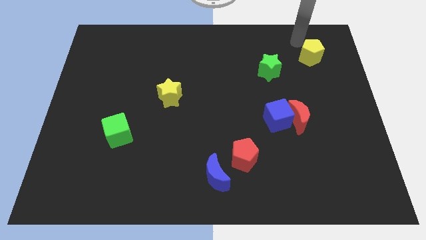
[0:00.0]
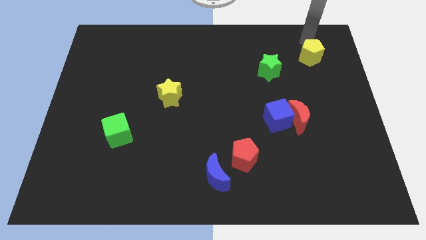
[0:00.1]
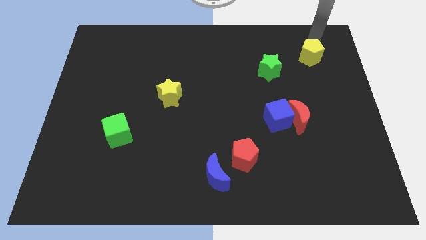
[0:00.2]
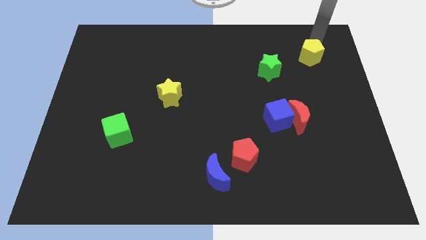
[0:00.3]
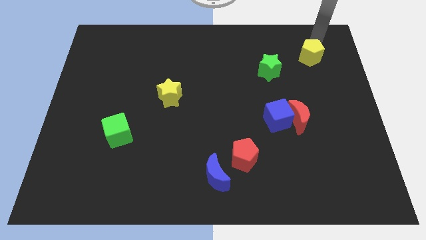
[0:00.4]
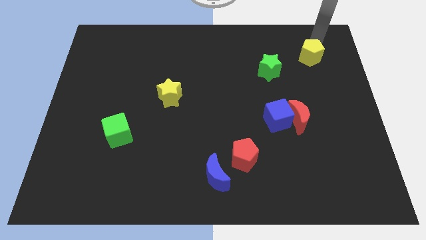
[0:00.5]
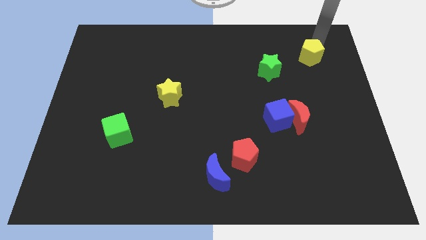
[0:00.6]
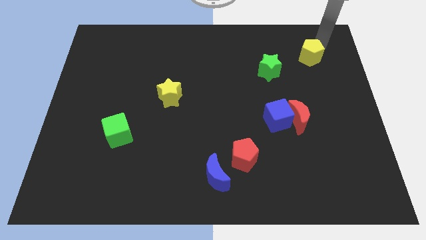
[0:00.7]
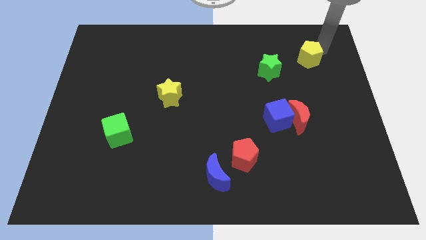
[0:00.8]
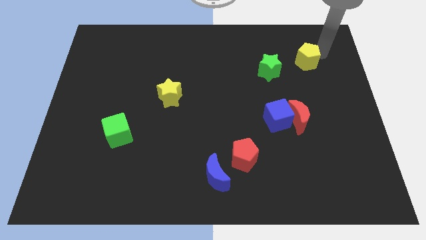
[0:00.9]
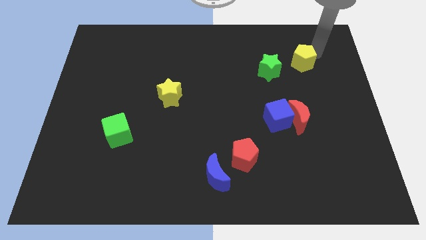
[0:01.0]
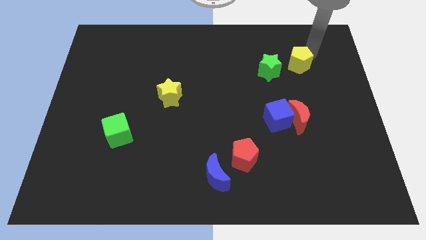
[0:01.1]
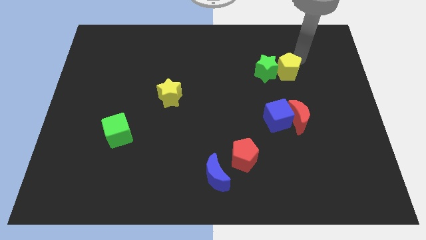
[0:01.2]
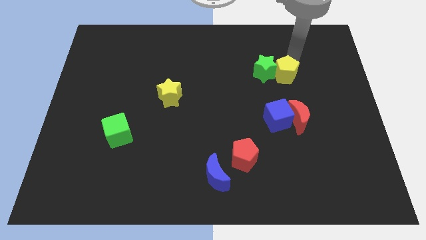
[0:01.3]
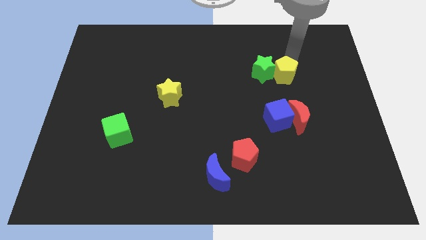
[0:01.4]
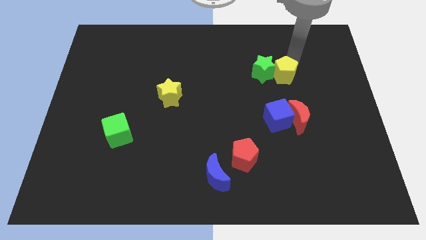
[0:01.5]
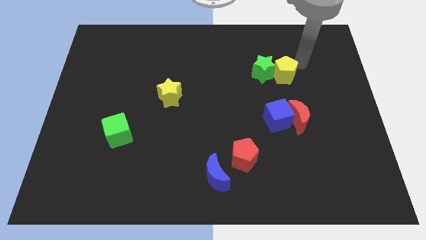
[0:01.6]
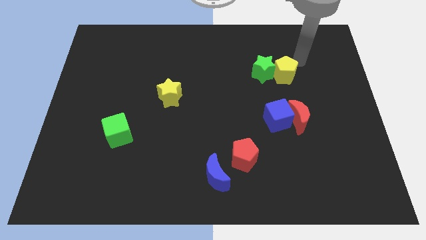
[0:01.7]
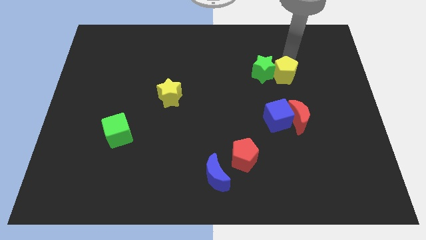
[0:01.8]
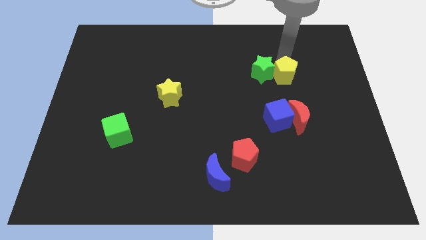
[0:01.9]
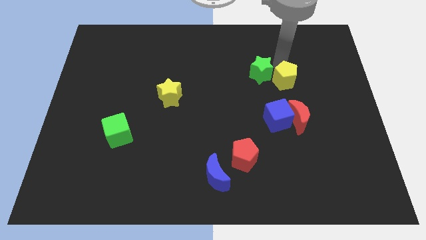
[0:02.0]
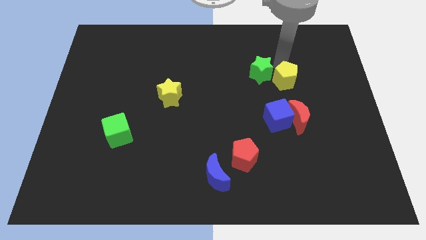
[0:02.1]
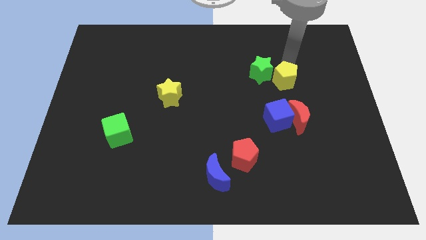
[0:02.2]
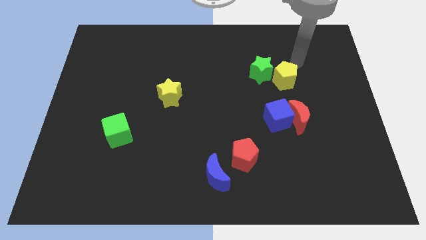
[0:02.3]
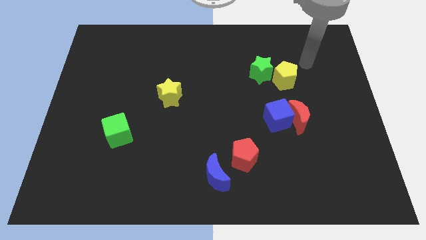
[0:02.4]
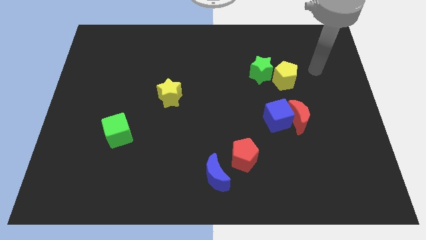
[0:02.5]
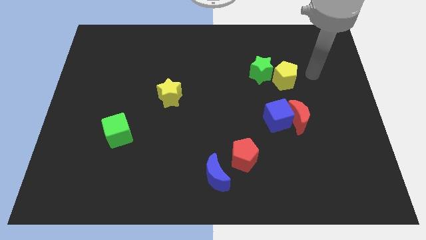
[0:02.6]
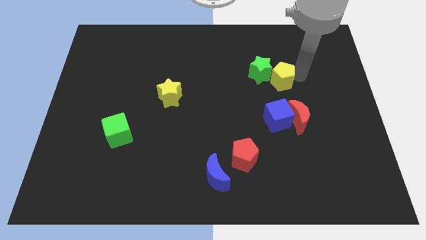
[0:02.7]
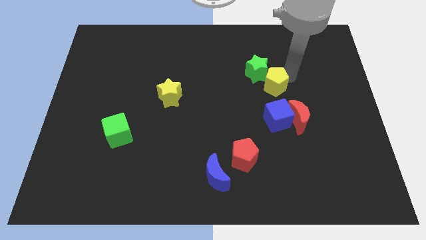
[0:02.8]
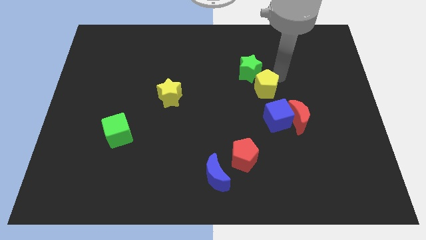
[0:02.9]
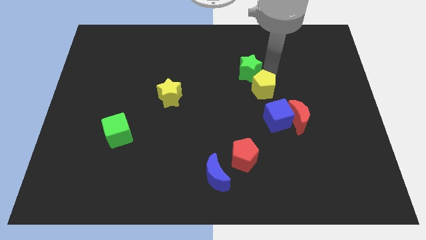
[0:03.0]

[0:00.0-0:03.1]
place the yellow pentagon between the green star and blue cube

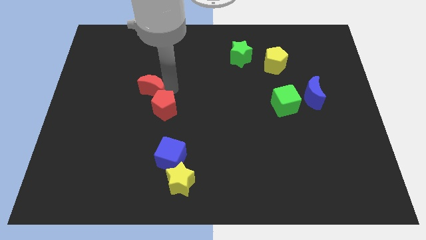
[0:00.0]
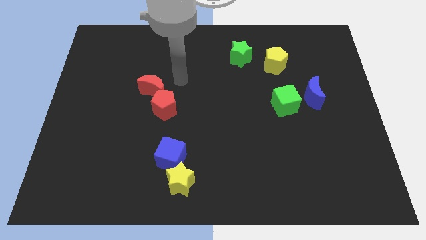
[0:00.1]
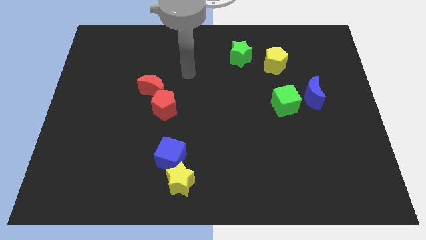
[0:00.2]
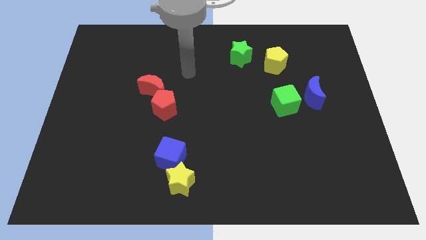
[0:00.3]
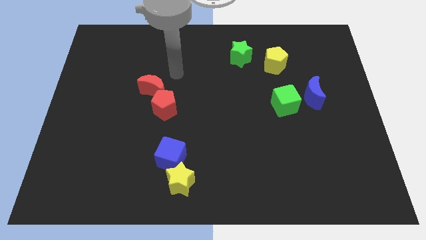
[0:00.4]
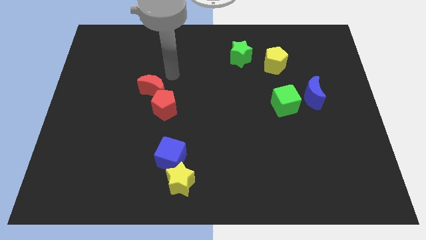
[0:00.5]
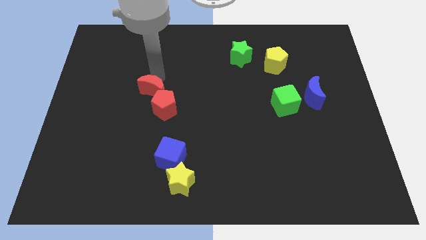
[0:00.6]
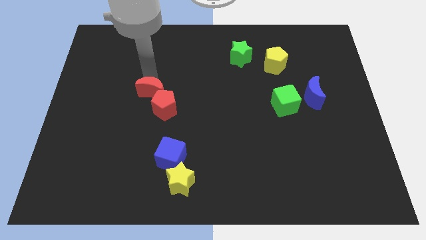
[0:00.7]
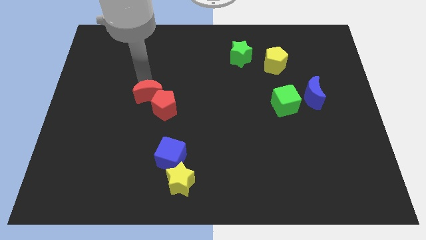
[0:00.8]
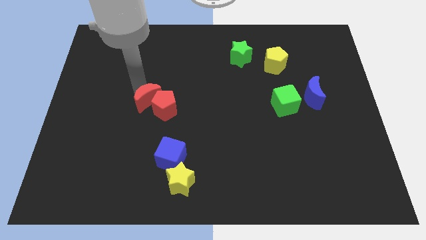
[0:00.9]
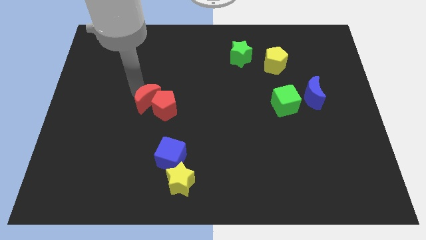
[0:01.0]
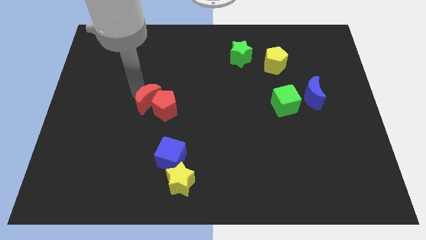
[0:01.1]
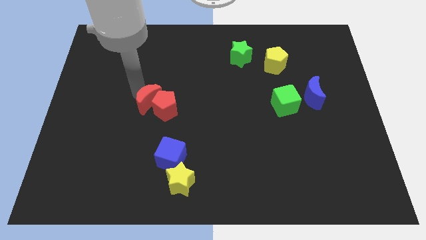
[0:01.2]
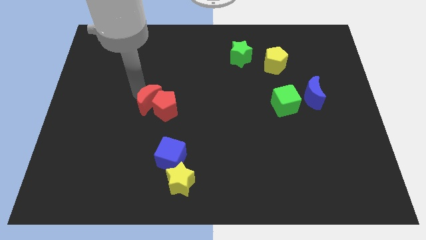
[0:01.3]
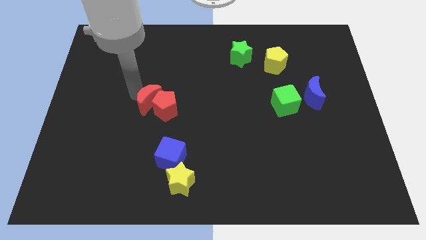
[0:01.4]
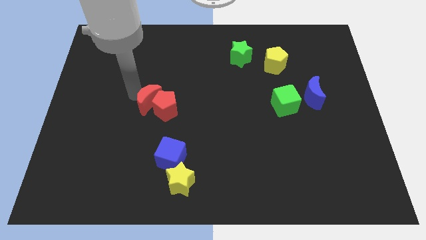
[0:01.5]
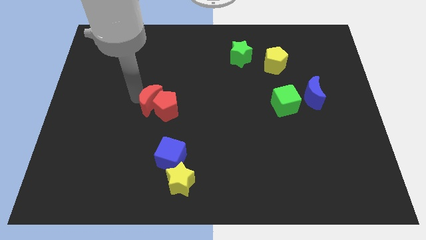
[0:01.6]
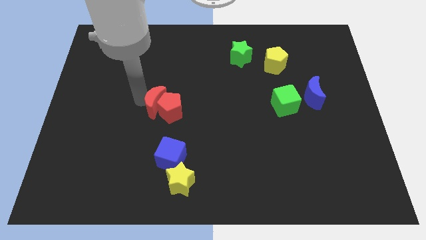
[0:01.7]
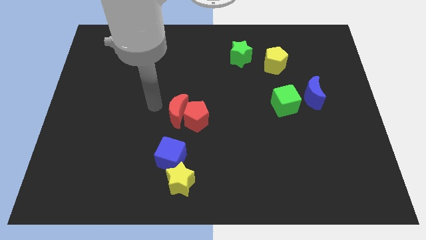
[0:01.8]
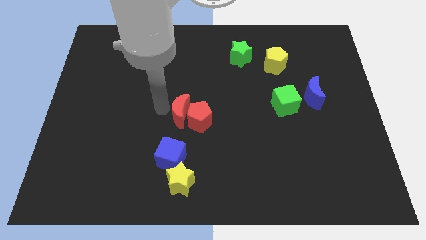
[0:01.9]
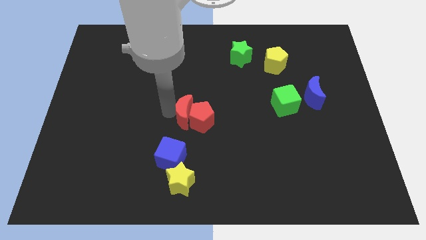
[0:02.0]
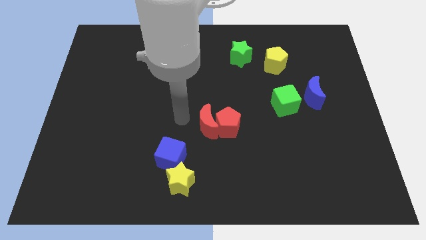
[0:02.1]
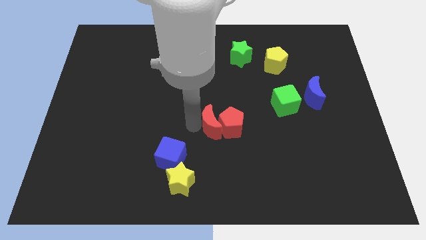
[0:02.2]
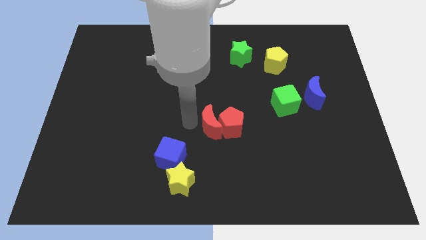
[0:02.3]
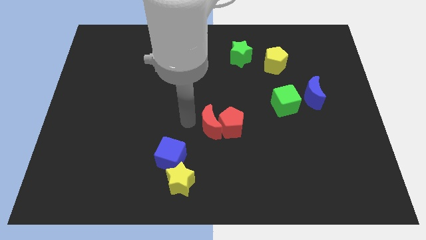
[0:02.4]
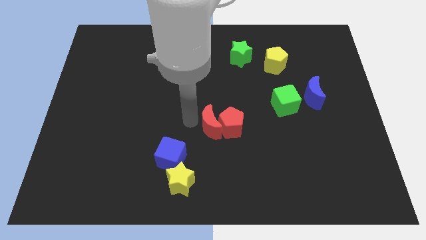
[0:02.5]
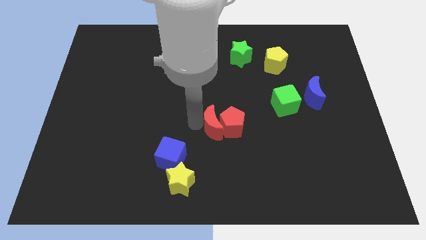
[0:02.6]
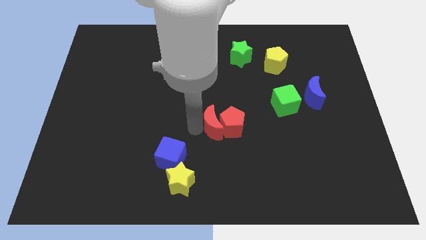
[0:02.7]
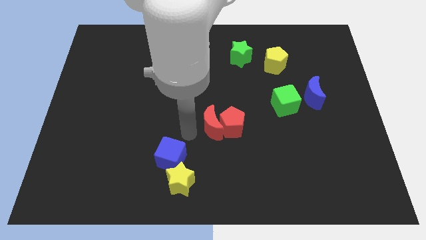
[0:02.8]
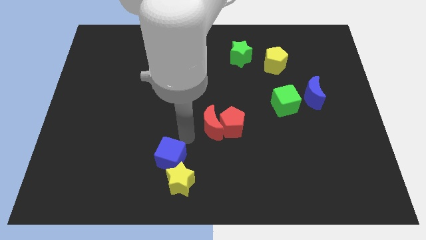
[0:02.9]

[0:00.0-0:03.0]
move the red blocks to the center of the board

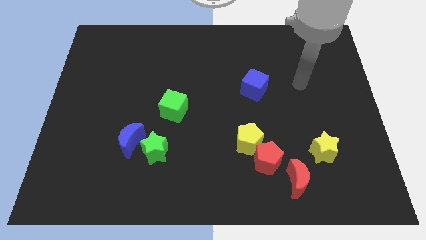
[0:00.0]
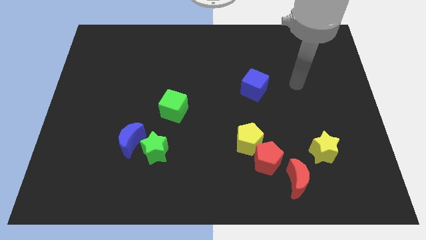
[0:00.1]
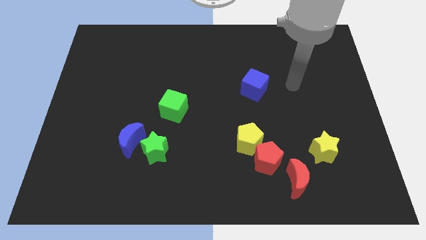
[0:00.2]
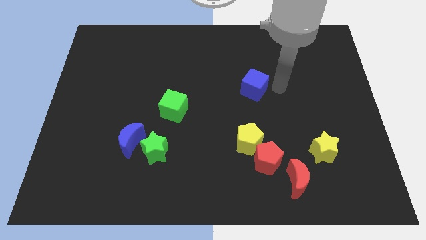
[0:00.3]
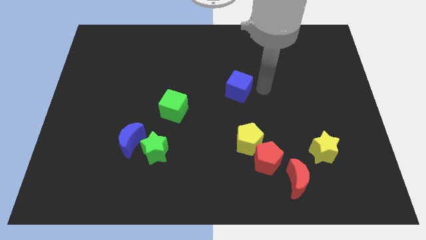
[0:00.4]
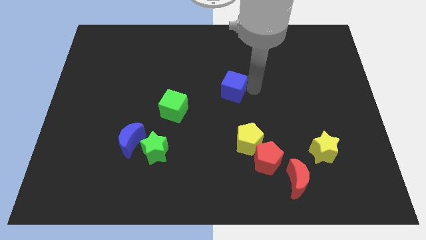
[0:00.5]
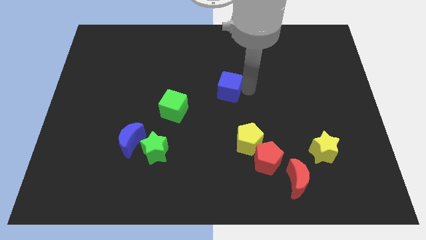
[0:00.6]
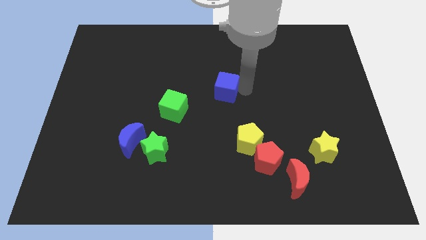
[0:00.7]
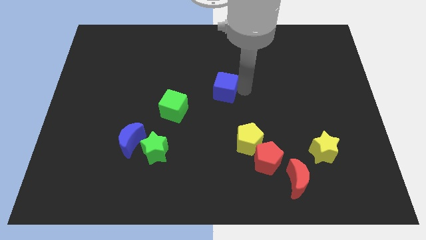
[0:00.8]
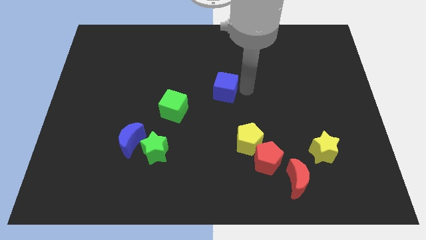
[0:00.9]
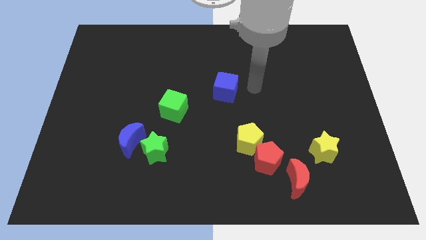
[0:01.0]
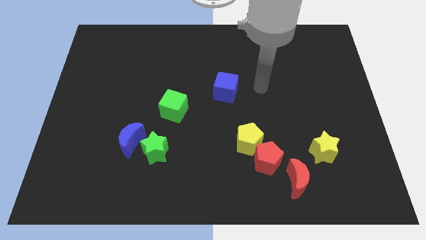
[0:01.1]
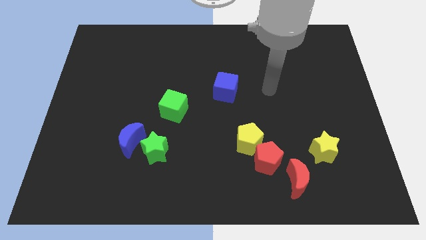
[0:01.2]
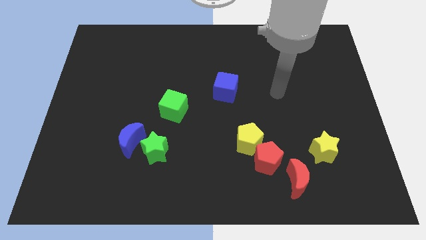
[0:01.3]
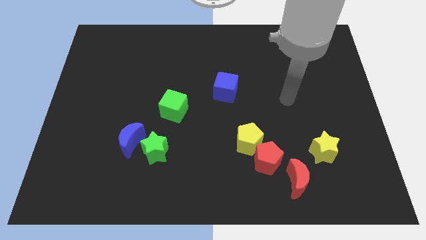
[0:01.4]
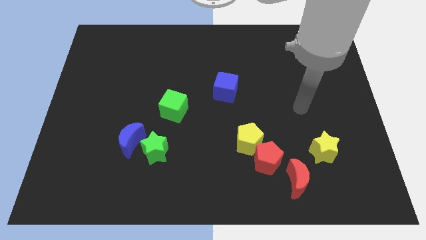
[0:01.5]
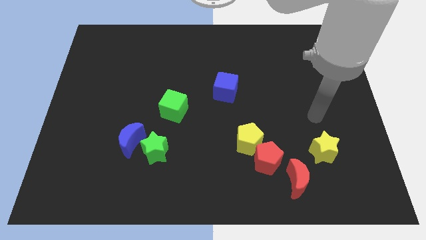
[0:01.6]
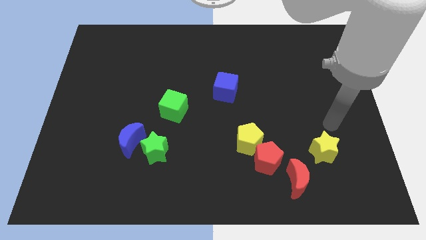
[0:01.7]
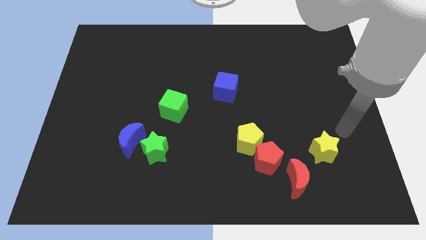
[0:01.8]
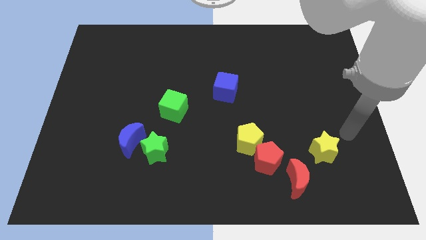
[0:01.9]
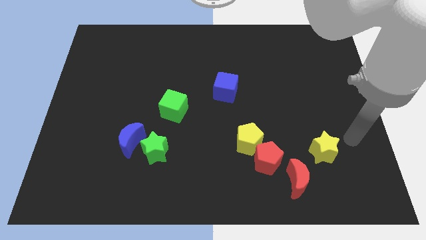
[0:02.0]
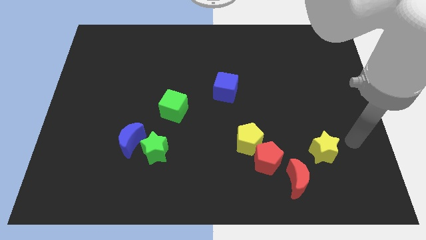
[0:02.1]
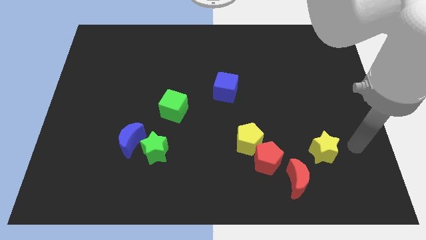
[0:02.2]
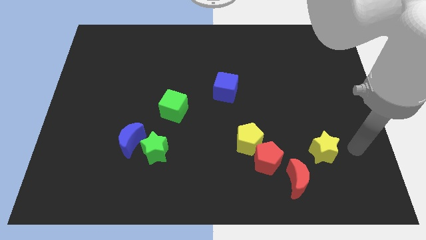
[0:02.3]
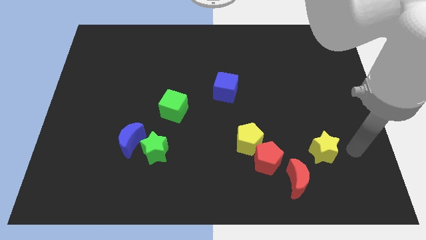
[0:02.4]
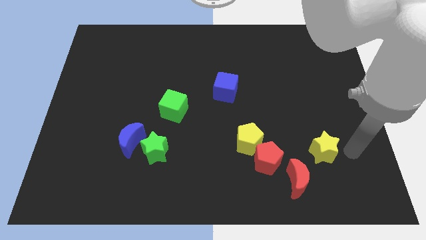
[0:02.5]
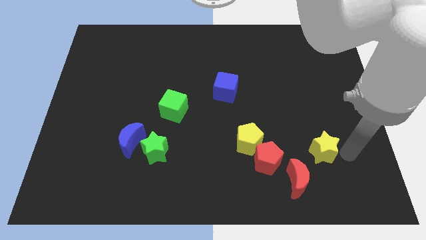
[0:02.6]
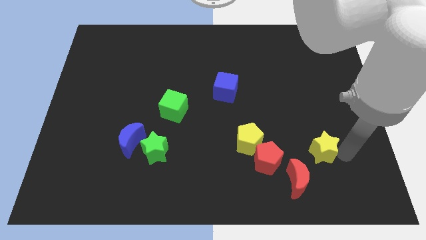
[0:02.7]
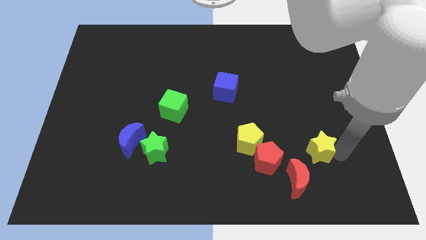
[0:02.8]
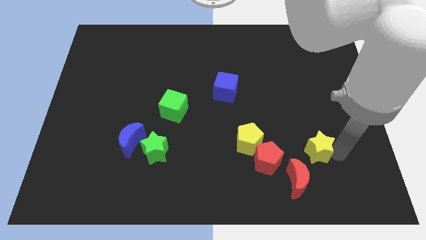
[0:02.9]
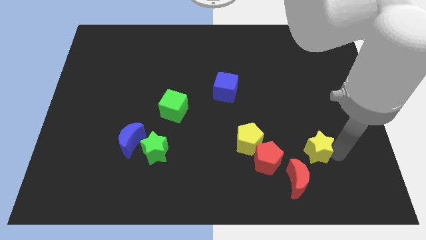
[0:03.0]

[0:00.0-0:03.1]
push the blue cube towards green cube and slightly touch yellow star
